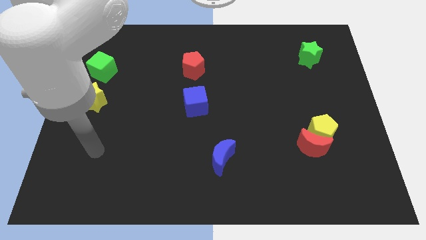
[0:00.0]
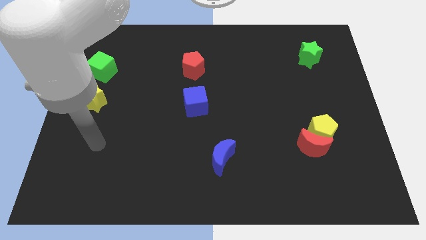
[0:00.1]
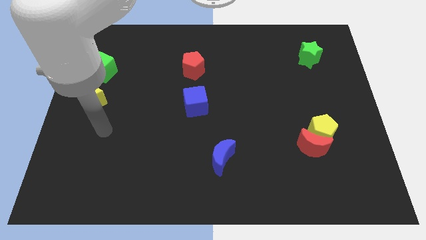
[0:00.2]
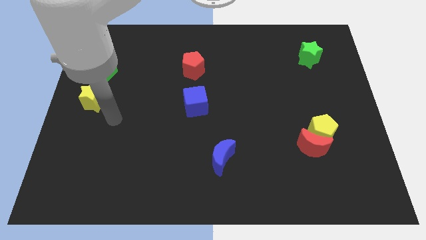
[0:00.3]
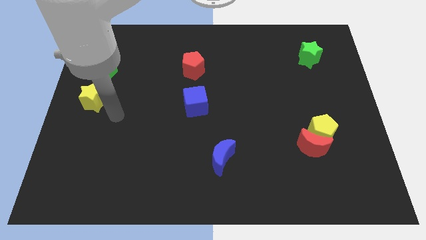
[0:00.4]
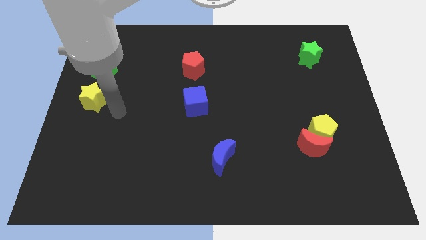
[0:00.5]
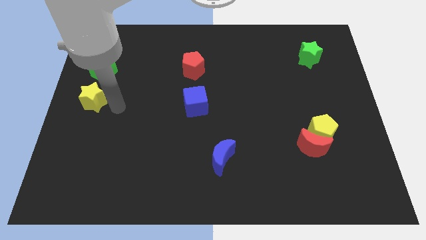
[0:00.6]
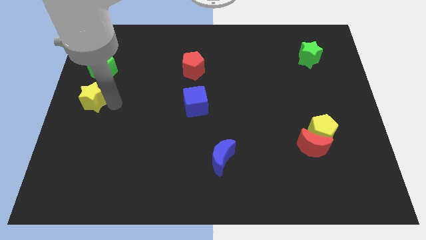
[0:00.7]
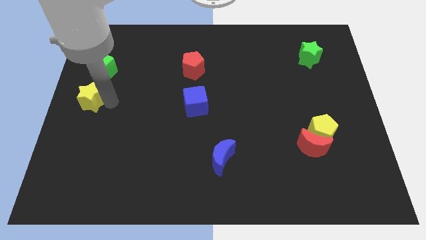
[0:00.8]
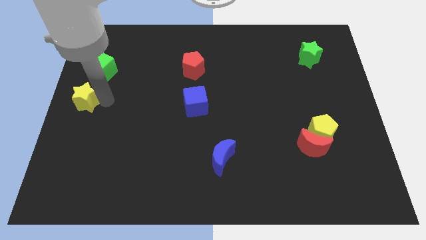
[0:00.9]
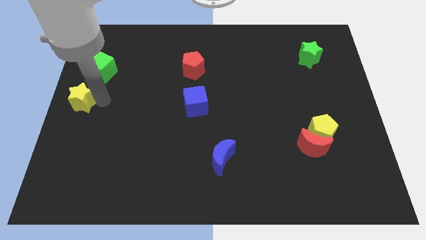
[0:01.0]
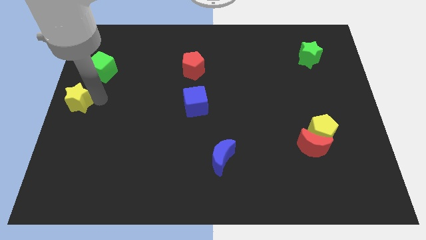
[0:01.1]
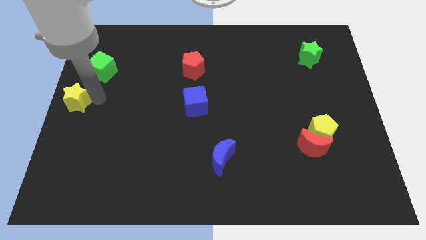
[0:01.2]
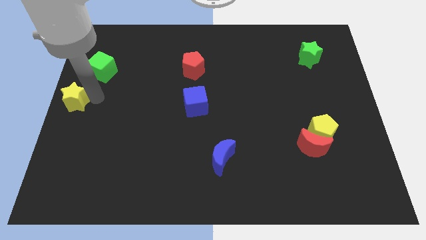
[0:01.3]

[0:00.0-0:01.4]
push the yellow star to the left top corner

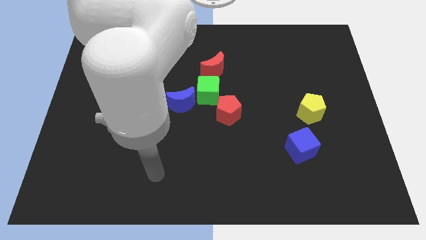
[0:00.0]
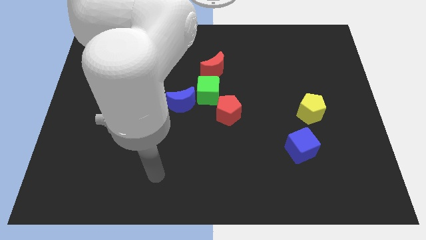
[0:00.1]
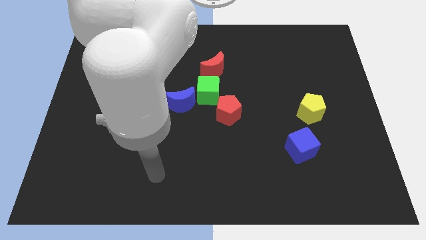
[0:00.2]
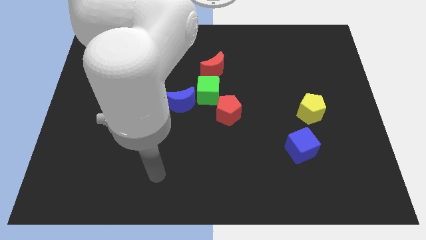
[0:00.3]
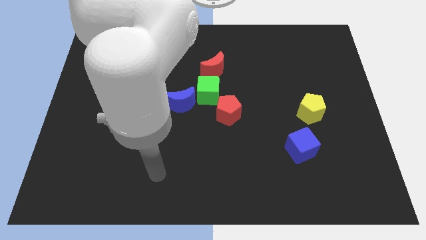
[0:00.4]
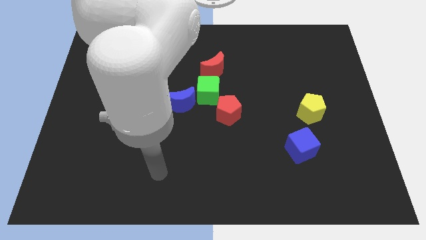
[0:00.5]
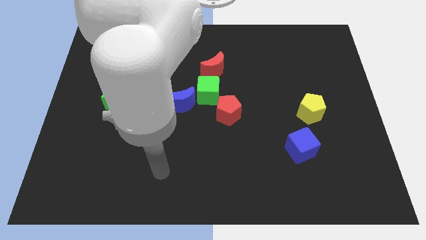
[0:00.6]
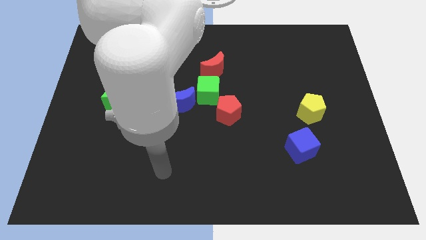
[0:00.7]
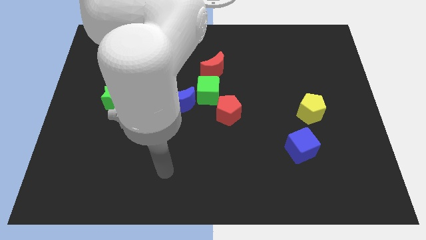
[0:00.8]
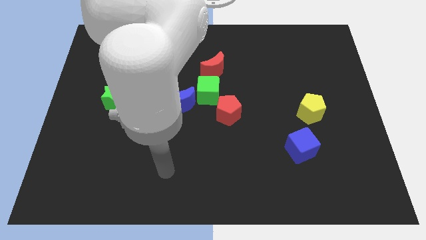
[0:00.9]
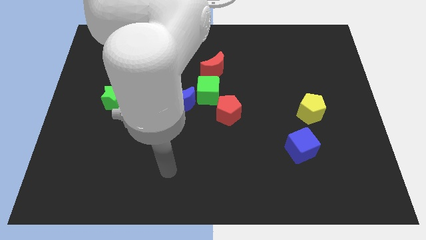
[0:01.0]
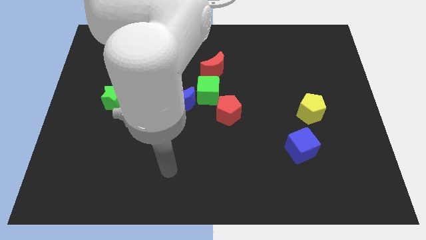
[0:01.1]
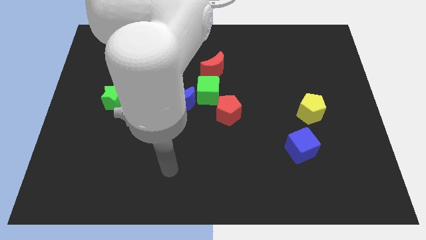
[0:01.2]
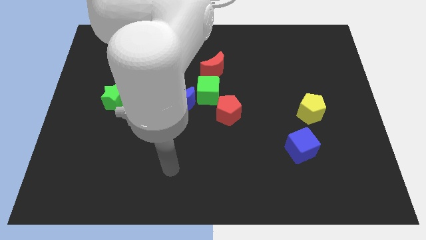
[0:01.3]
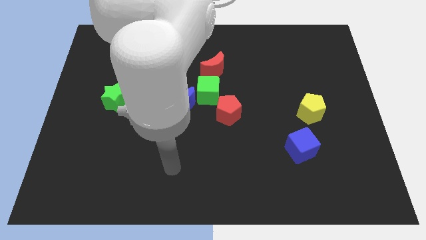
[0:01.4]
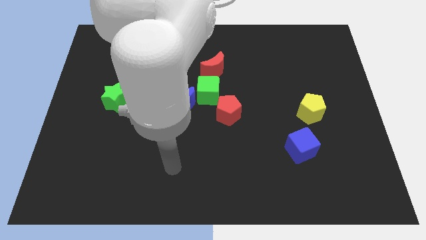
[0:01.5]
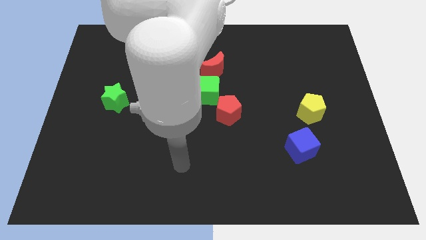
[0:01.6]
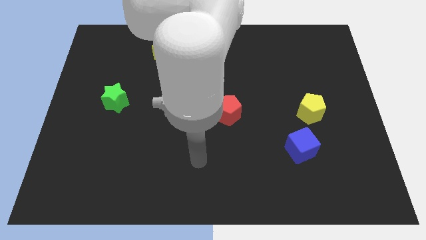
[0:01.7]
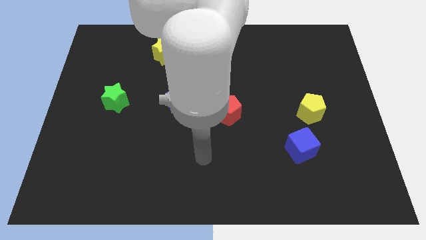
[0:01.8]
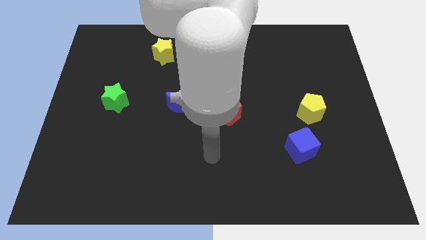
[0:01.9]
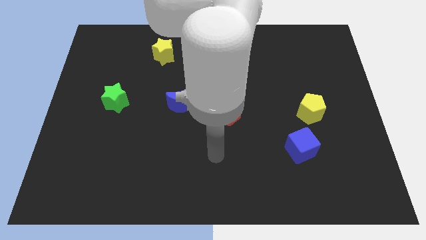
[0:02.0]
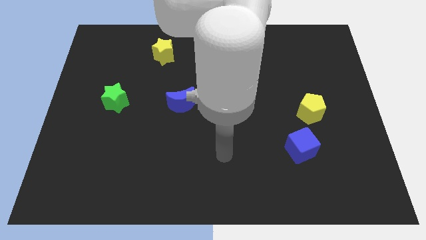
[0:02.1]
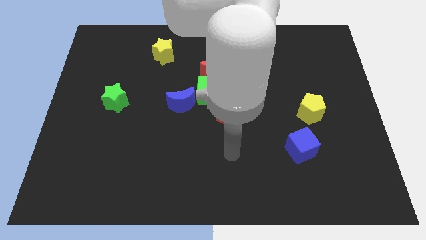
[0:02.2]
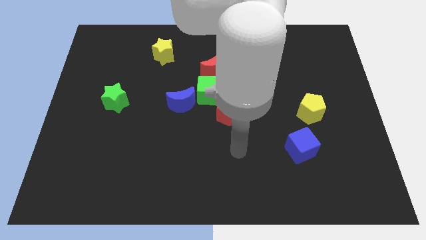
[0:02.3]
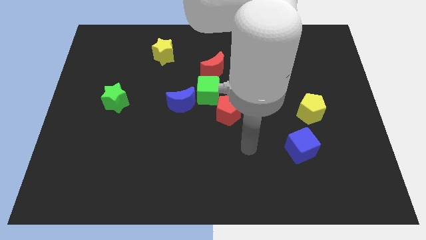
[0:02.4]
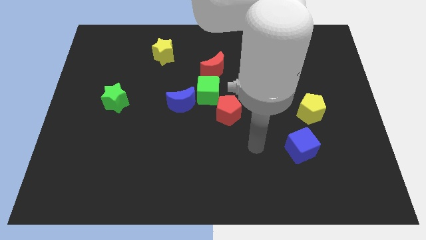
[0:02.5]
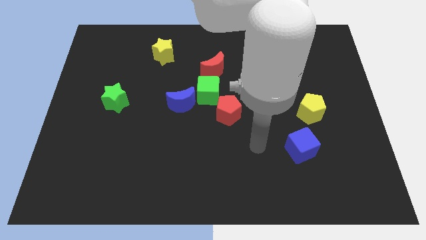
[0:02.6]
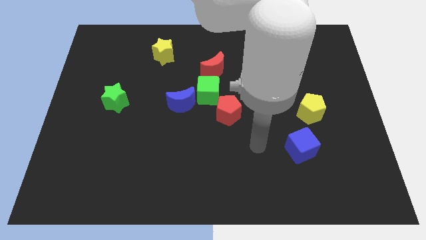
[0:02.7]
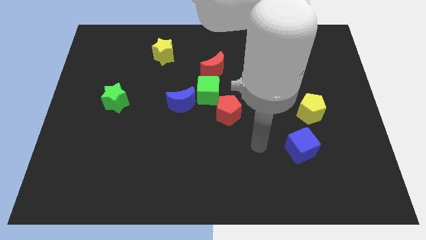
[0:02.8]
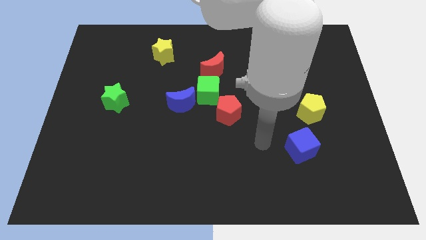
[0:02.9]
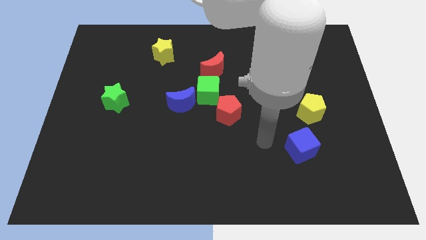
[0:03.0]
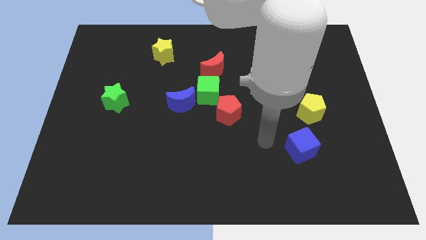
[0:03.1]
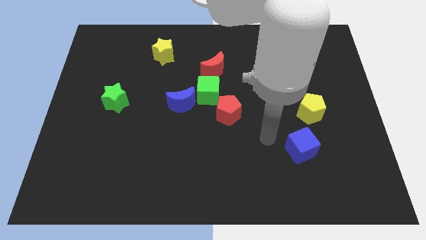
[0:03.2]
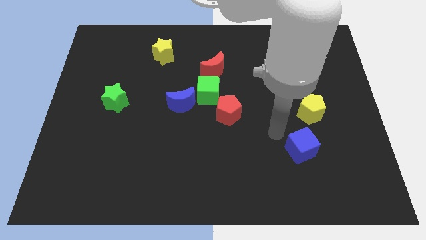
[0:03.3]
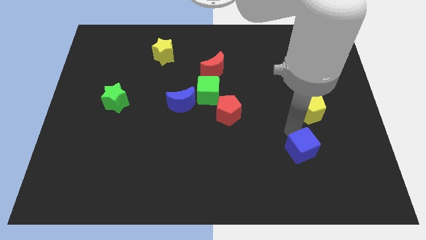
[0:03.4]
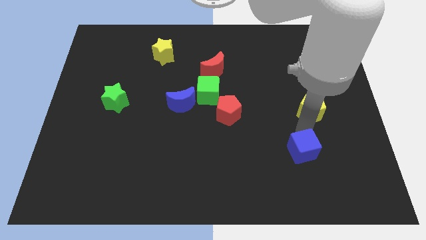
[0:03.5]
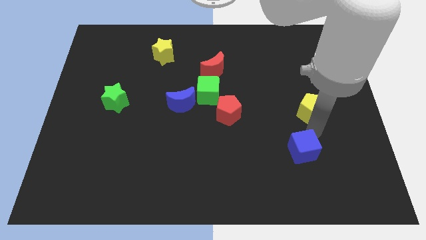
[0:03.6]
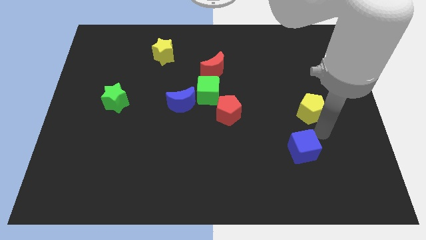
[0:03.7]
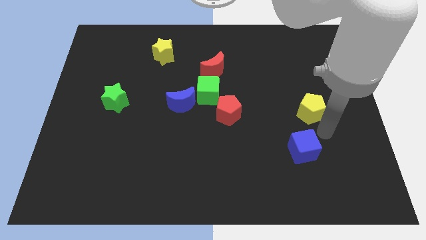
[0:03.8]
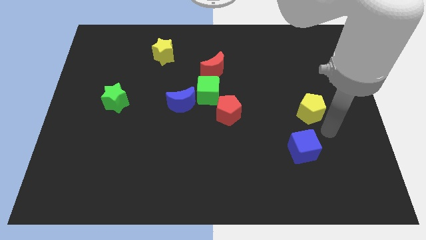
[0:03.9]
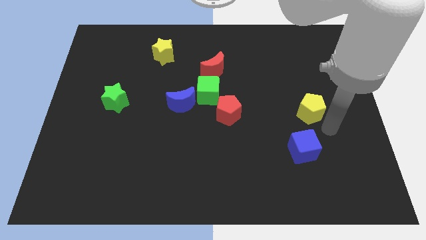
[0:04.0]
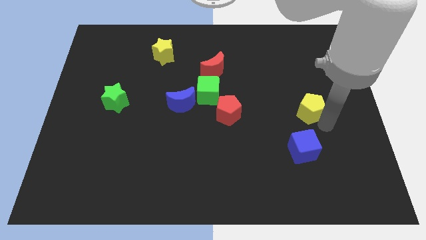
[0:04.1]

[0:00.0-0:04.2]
move the arm right side of the board

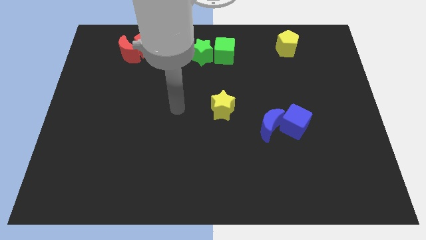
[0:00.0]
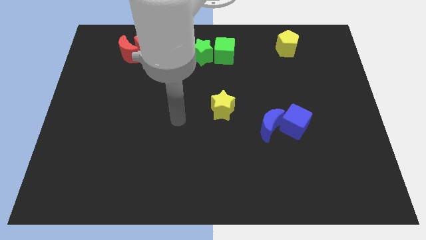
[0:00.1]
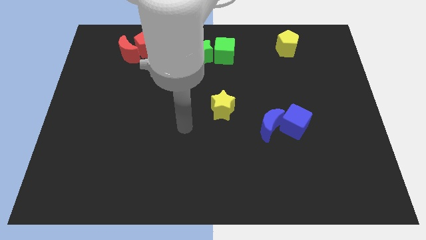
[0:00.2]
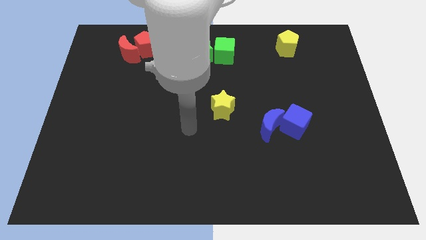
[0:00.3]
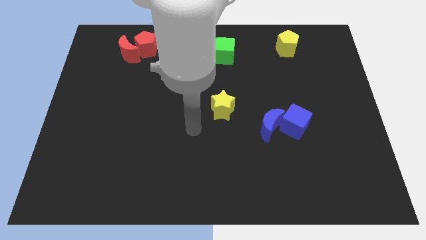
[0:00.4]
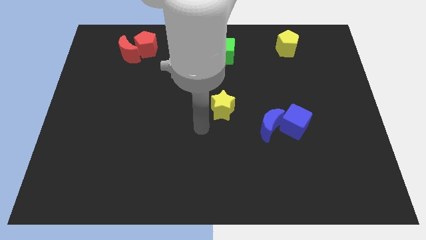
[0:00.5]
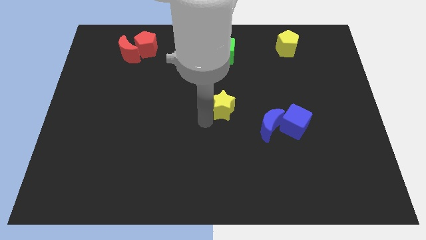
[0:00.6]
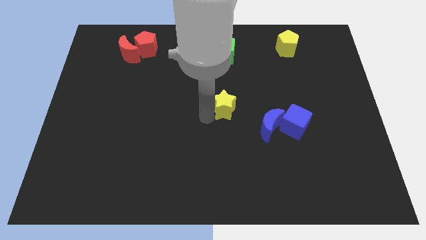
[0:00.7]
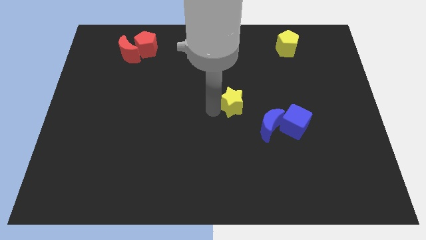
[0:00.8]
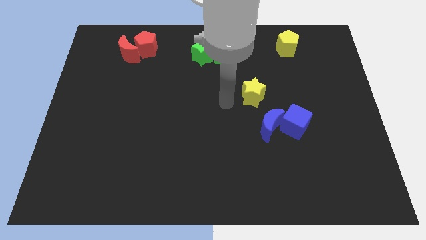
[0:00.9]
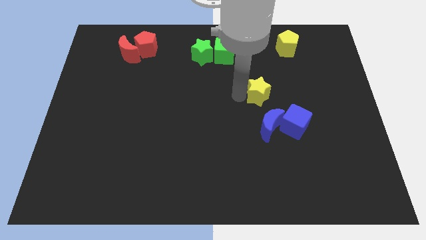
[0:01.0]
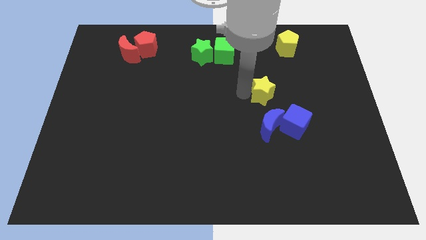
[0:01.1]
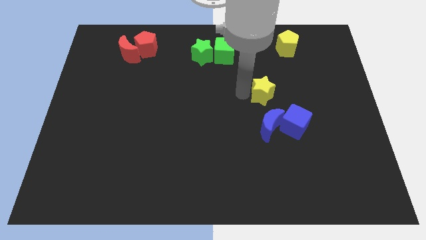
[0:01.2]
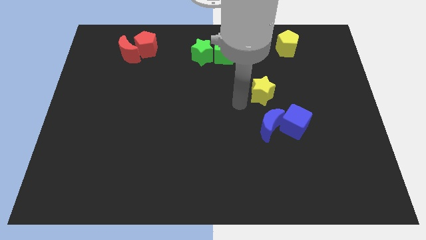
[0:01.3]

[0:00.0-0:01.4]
push the yellow star to the top of the blue crescent

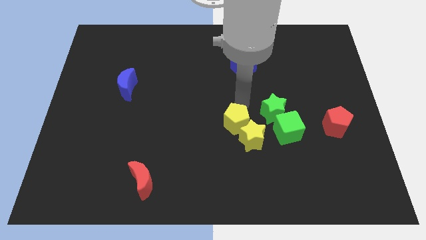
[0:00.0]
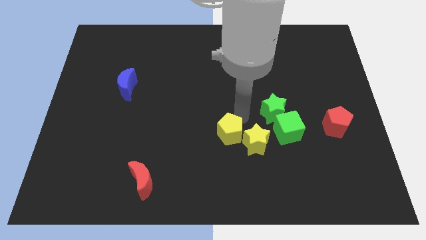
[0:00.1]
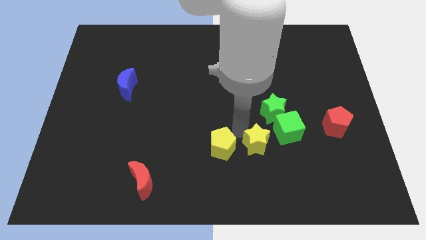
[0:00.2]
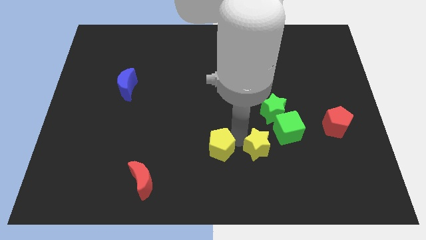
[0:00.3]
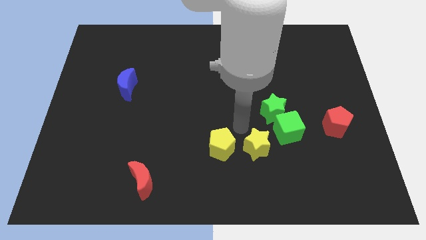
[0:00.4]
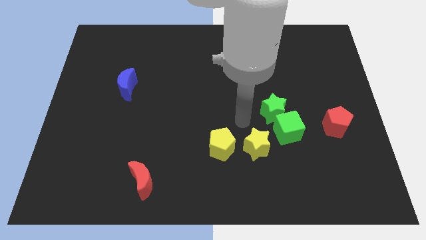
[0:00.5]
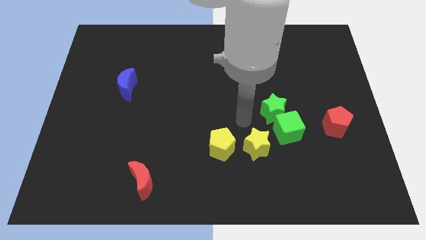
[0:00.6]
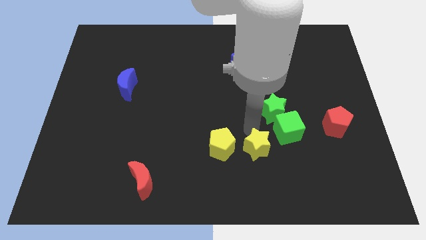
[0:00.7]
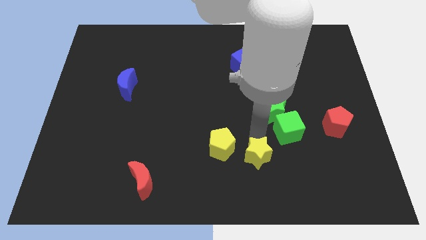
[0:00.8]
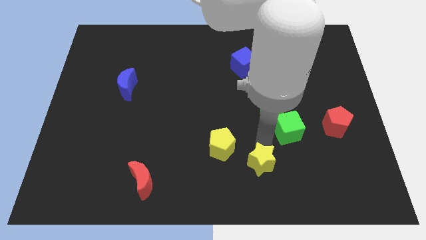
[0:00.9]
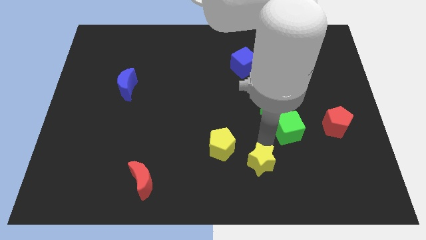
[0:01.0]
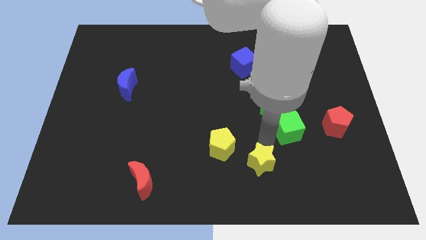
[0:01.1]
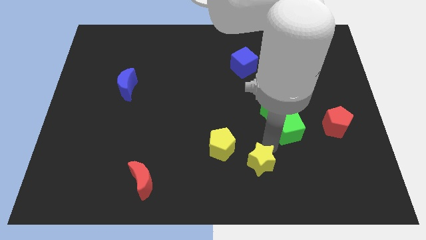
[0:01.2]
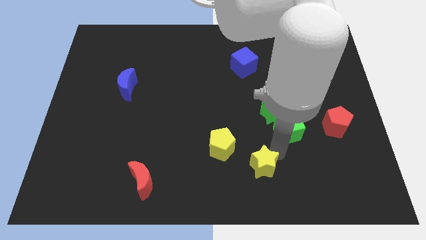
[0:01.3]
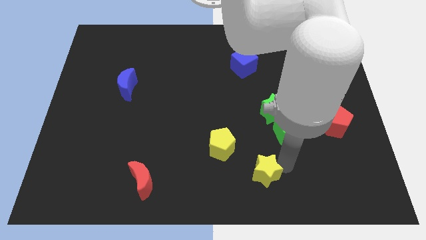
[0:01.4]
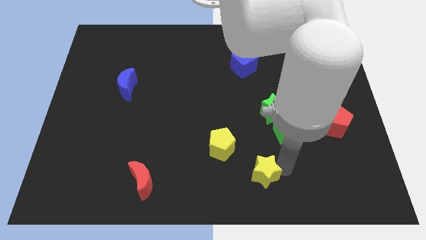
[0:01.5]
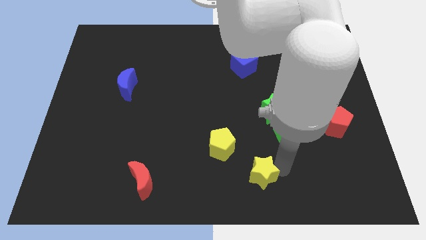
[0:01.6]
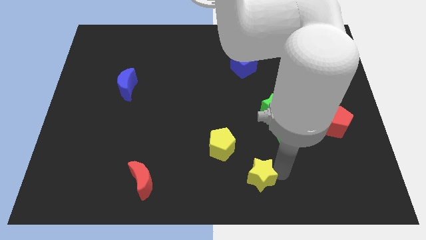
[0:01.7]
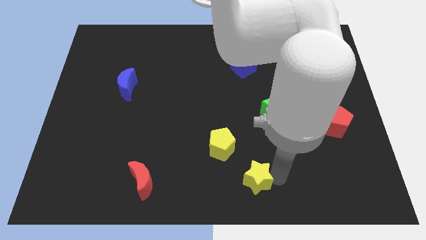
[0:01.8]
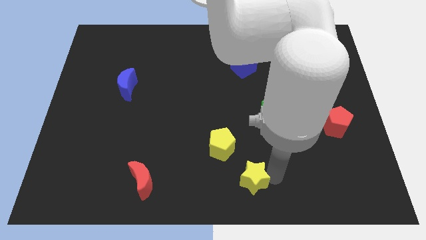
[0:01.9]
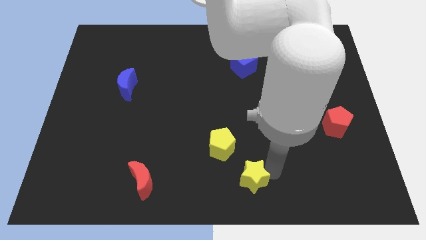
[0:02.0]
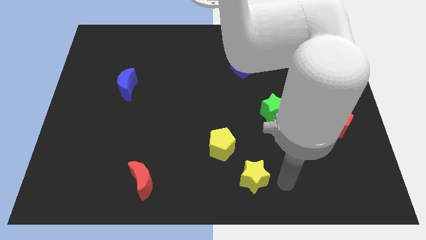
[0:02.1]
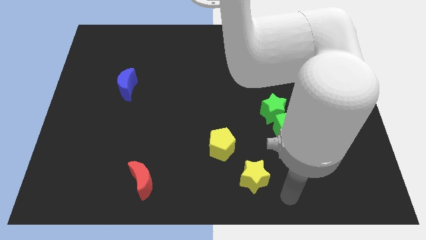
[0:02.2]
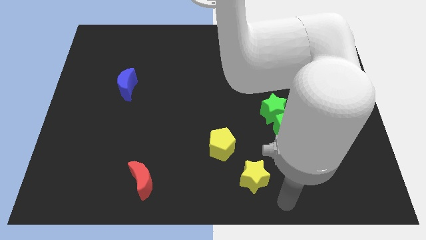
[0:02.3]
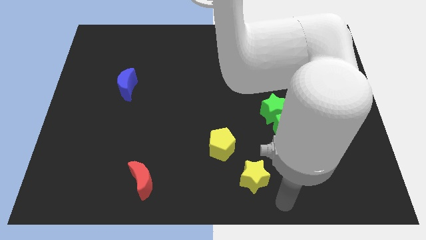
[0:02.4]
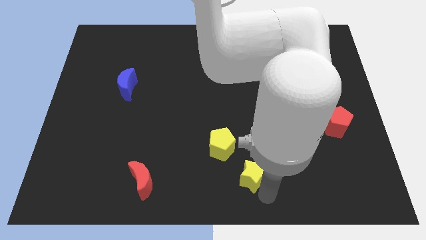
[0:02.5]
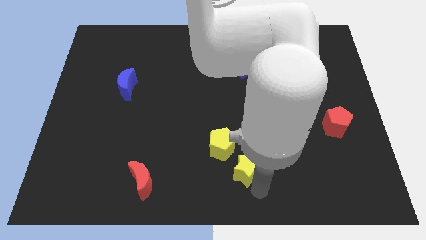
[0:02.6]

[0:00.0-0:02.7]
separate the yellow star from yellow pentagon
